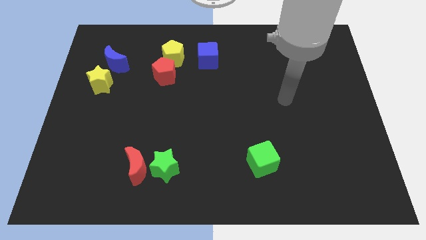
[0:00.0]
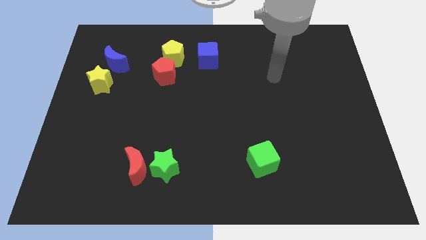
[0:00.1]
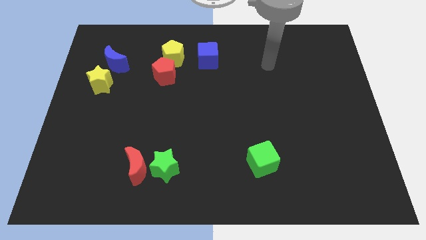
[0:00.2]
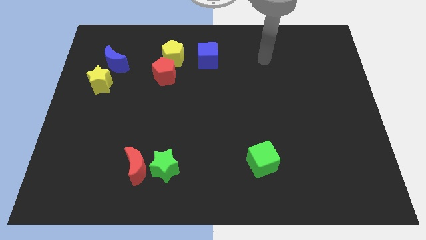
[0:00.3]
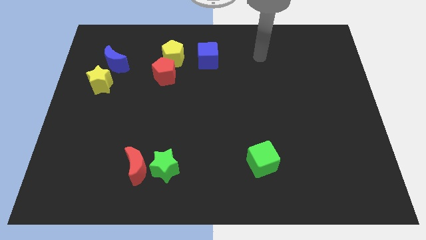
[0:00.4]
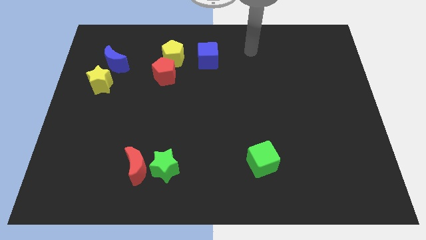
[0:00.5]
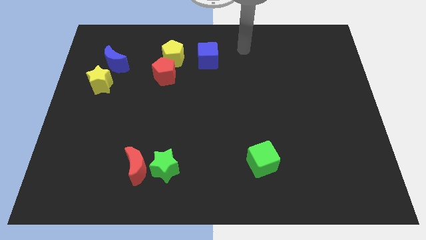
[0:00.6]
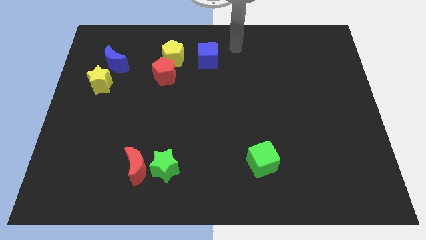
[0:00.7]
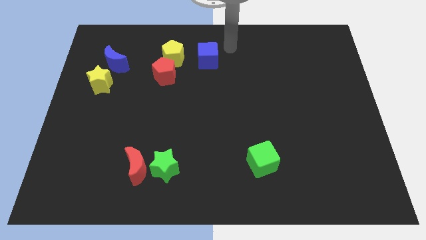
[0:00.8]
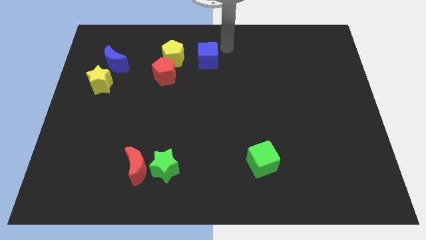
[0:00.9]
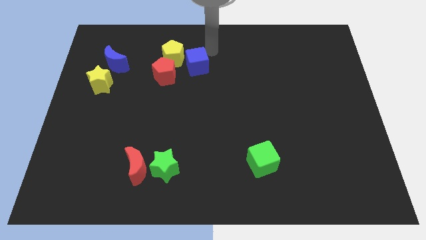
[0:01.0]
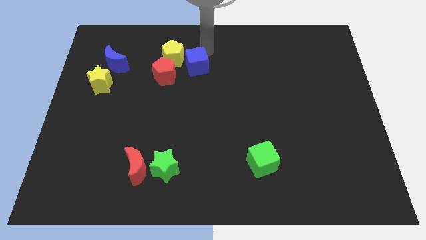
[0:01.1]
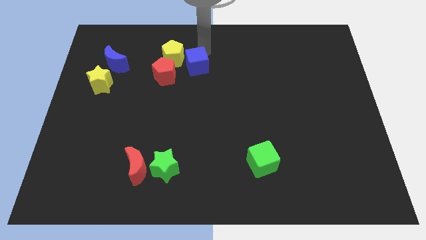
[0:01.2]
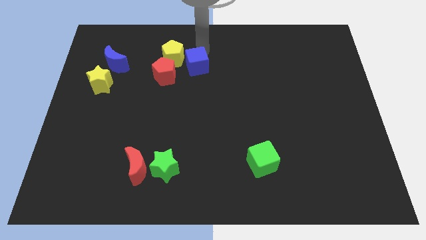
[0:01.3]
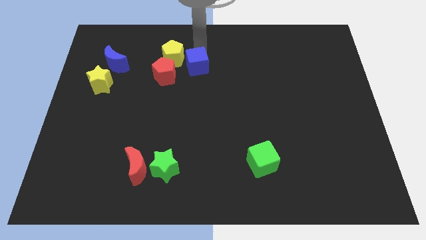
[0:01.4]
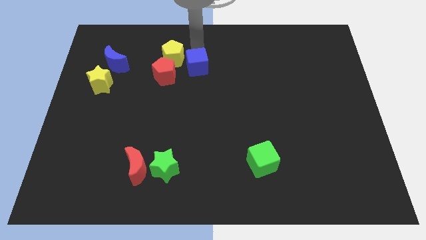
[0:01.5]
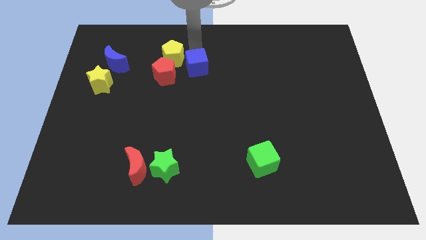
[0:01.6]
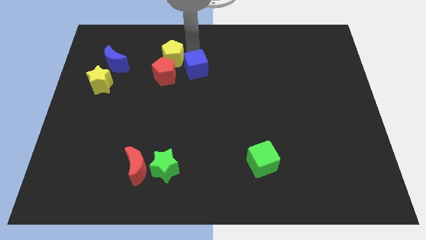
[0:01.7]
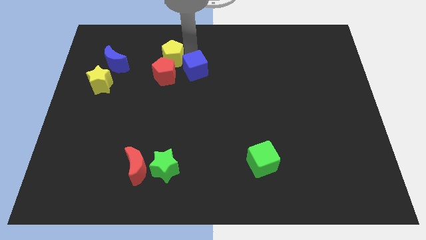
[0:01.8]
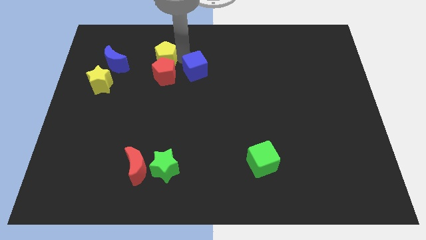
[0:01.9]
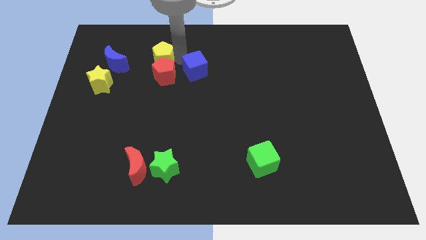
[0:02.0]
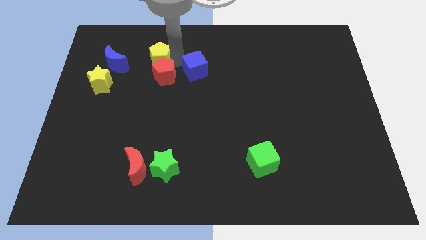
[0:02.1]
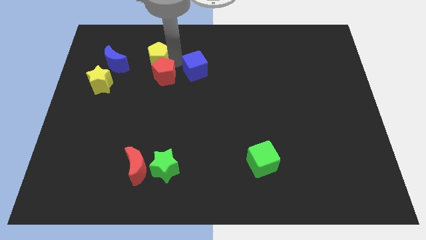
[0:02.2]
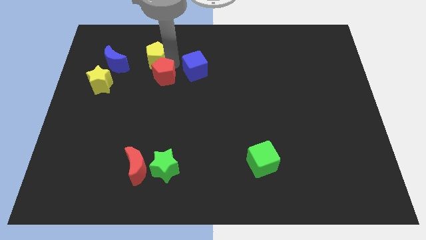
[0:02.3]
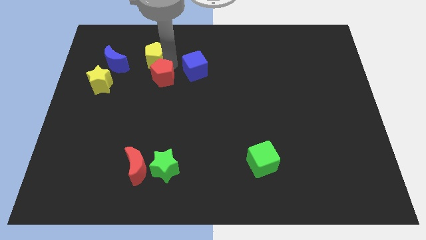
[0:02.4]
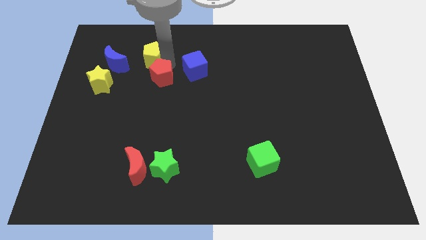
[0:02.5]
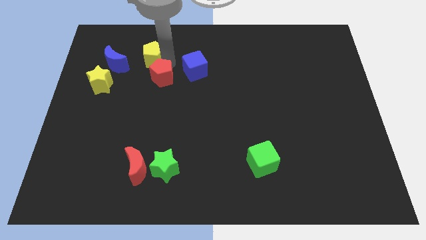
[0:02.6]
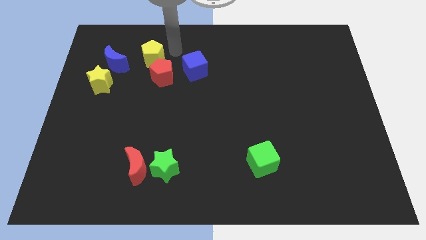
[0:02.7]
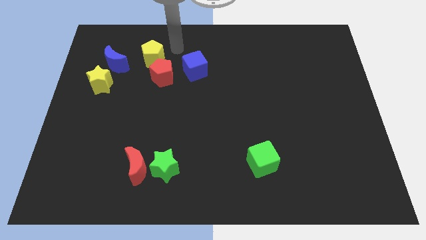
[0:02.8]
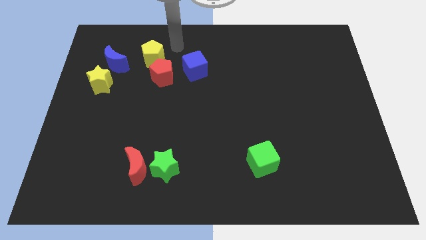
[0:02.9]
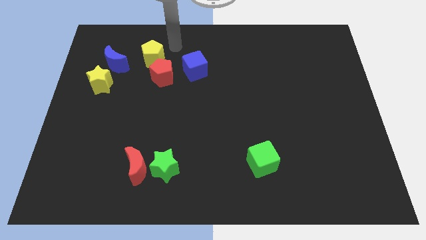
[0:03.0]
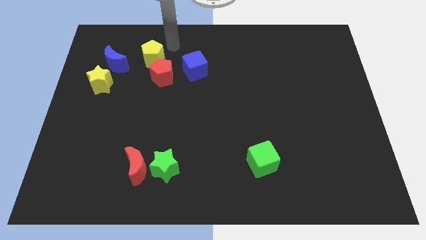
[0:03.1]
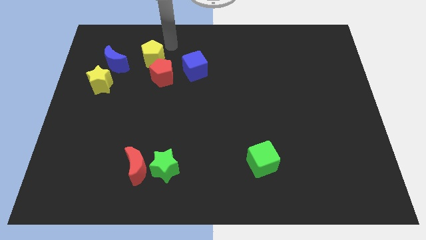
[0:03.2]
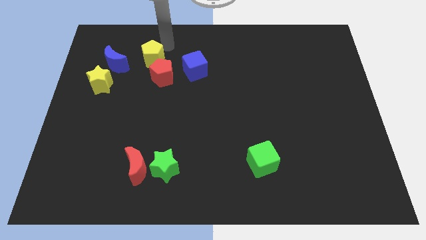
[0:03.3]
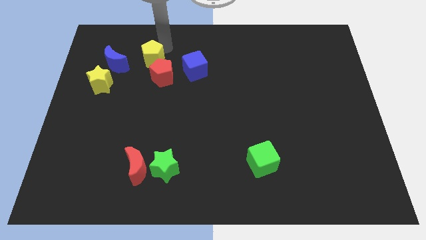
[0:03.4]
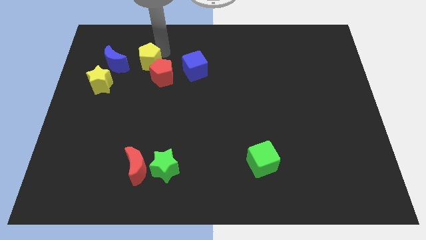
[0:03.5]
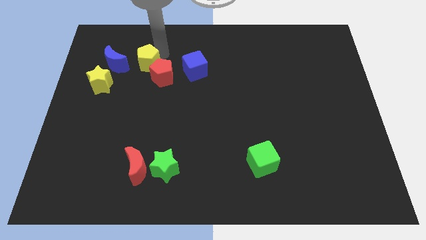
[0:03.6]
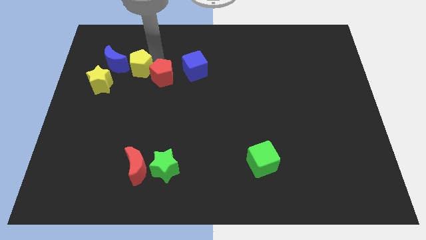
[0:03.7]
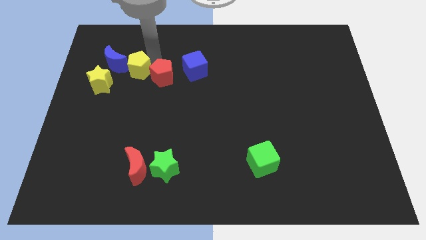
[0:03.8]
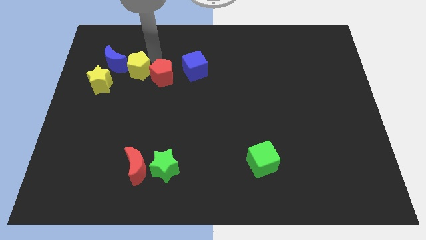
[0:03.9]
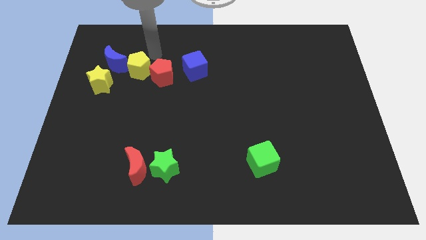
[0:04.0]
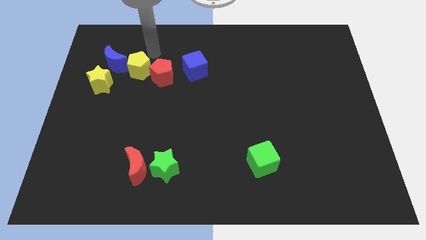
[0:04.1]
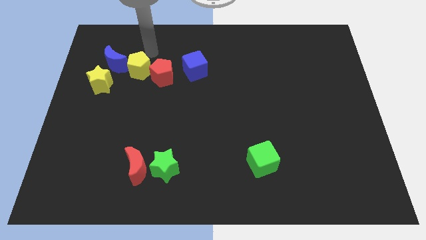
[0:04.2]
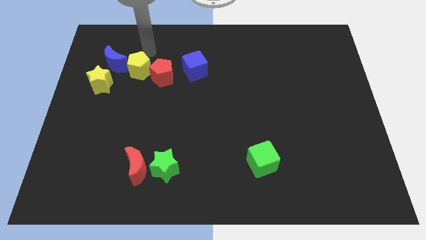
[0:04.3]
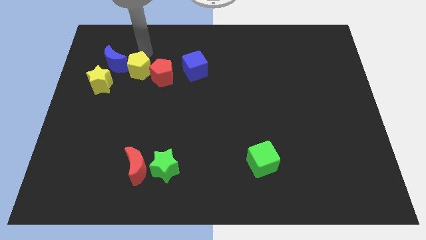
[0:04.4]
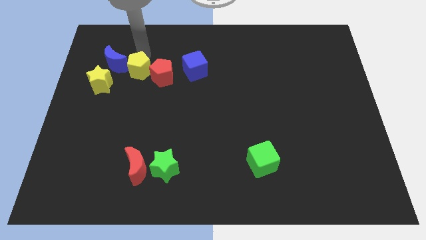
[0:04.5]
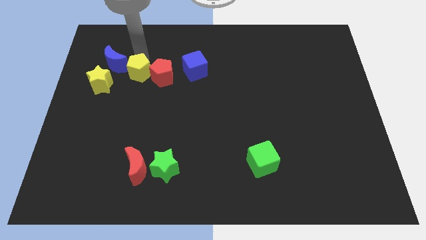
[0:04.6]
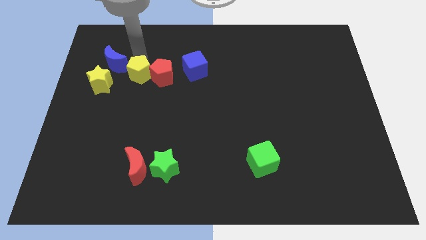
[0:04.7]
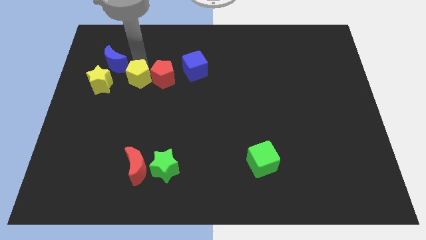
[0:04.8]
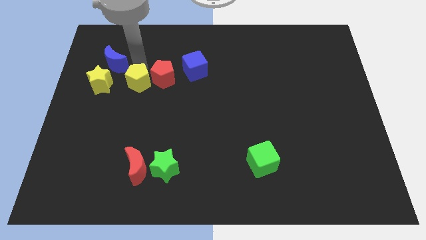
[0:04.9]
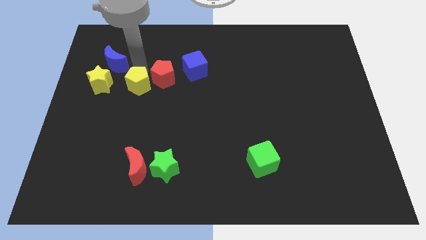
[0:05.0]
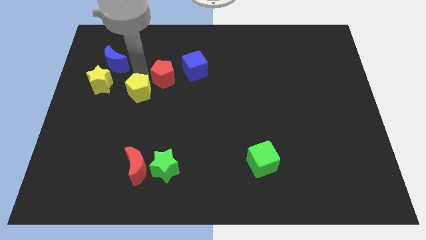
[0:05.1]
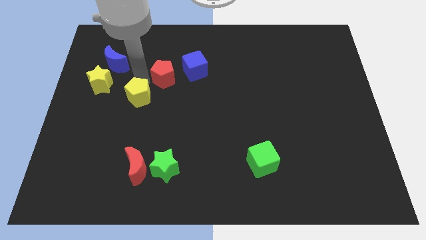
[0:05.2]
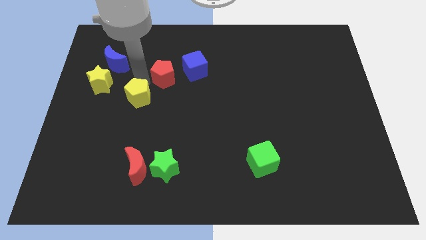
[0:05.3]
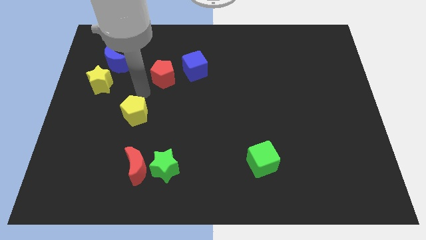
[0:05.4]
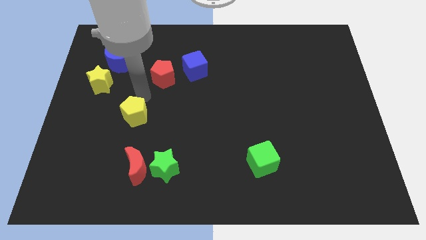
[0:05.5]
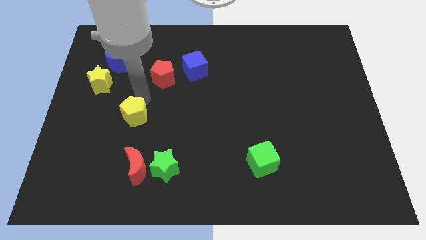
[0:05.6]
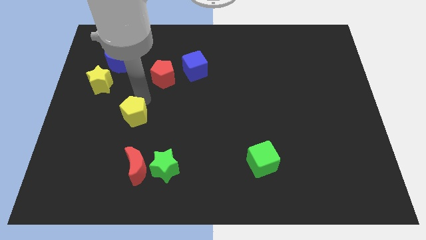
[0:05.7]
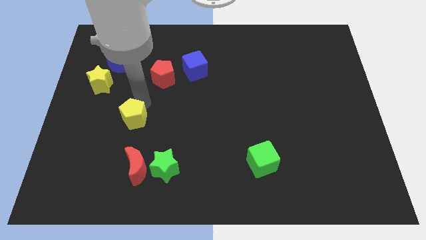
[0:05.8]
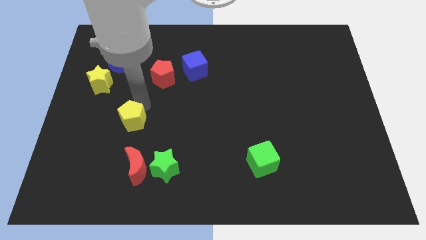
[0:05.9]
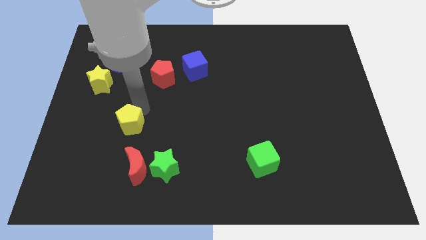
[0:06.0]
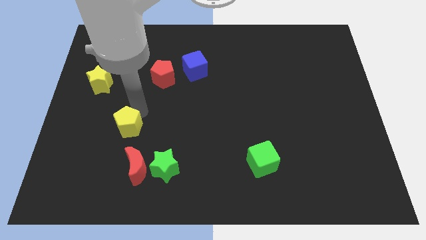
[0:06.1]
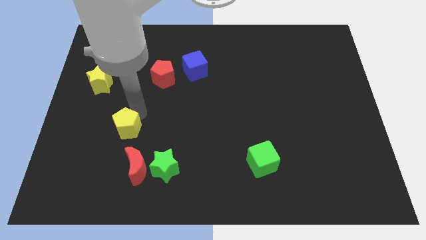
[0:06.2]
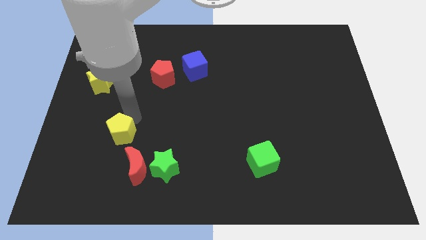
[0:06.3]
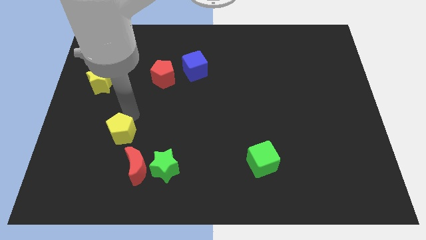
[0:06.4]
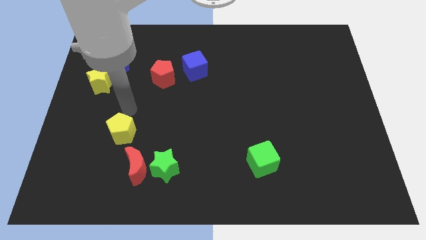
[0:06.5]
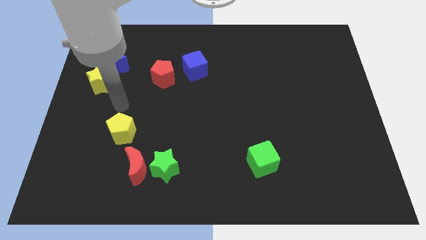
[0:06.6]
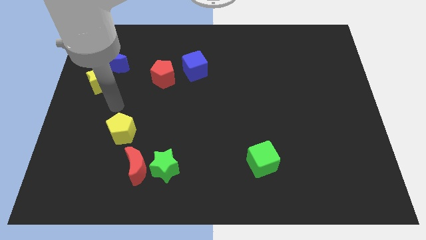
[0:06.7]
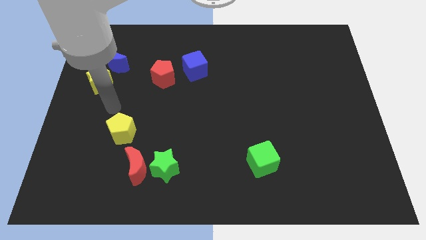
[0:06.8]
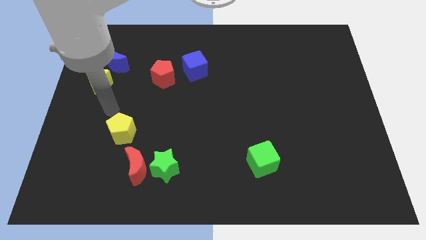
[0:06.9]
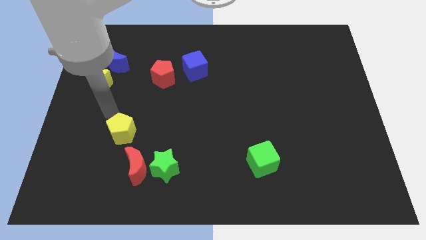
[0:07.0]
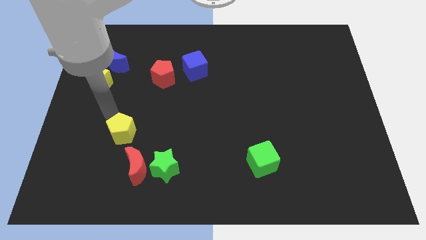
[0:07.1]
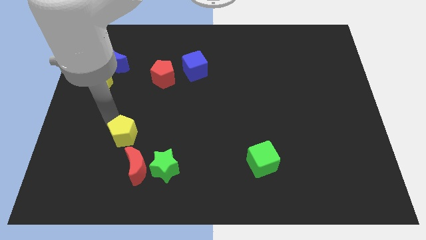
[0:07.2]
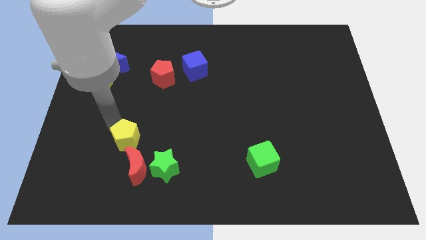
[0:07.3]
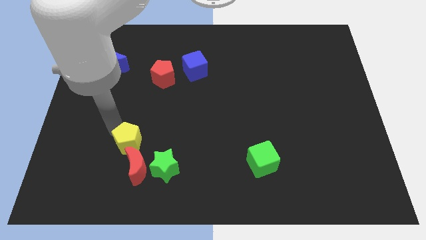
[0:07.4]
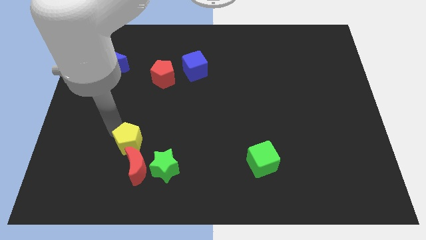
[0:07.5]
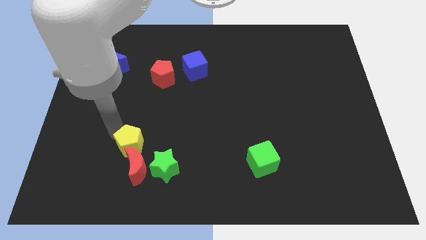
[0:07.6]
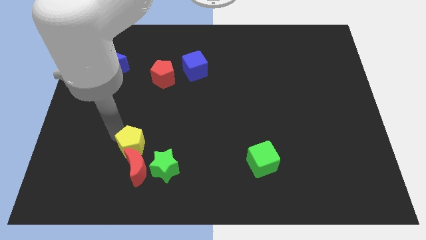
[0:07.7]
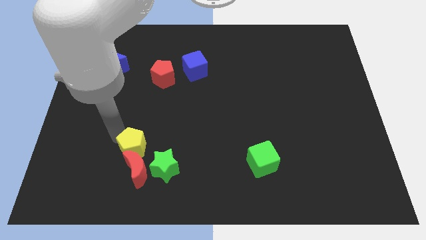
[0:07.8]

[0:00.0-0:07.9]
push the yellow pentagon to the red moon

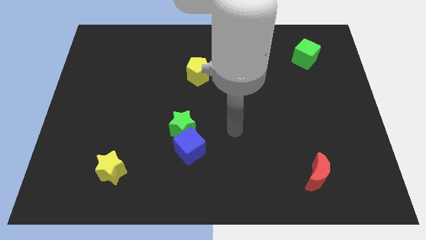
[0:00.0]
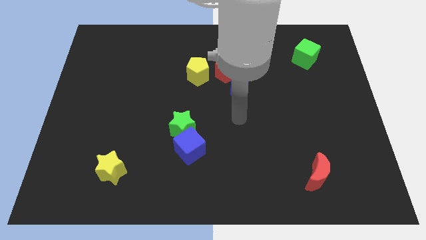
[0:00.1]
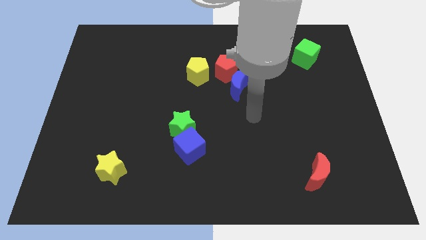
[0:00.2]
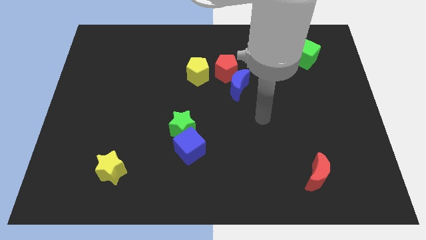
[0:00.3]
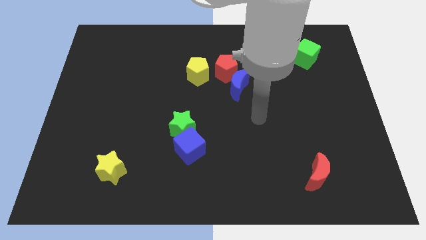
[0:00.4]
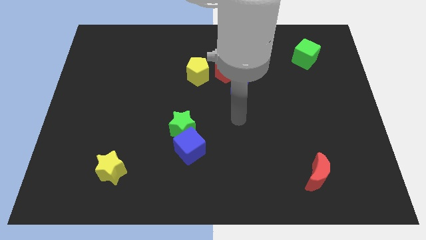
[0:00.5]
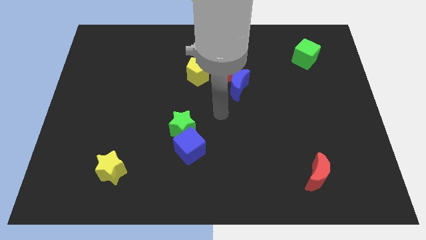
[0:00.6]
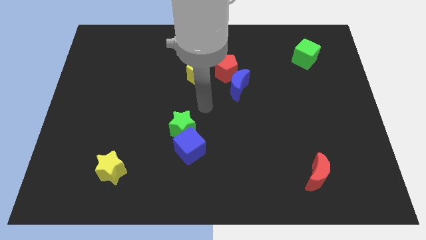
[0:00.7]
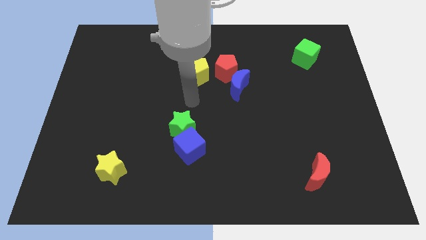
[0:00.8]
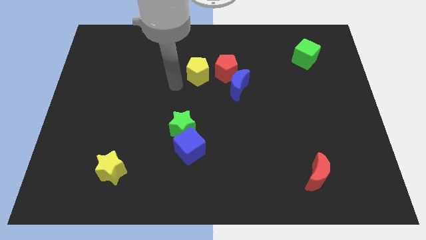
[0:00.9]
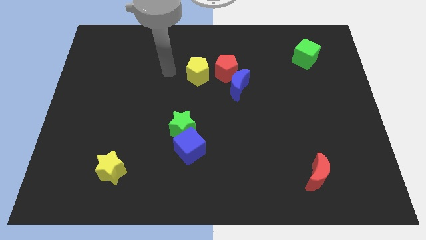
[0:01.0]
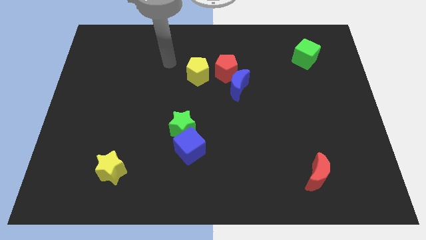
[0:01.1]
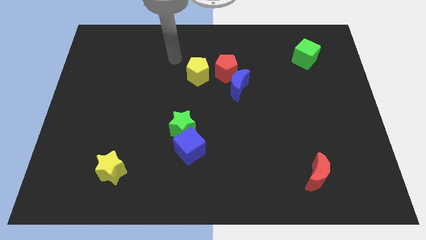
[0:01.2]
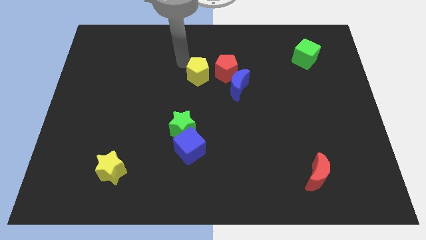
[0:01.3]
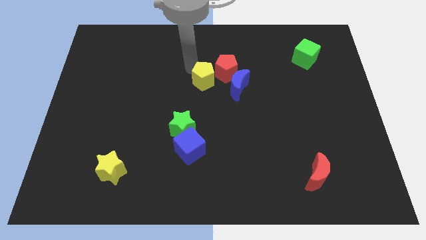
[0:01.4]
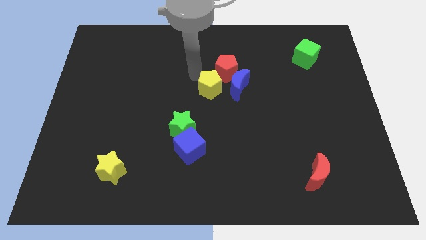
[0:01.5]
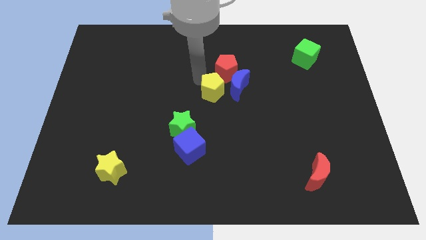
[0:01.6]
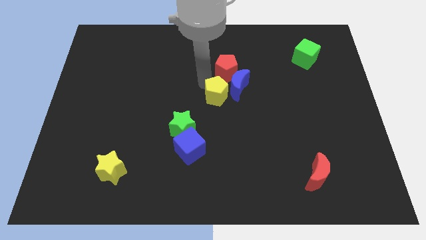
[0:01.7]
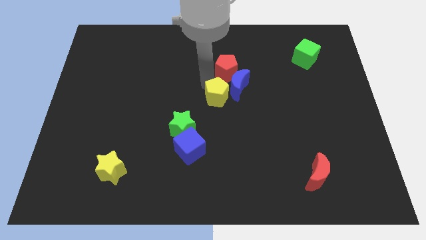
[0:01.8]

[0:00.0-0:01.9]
move the yellow pentagon to the blue moon
